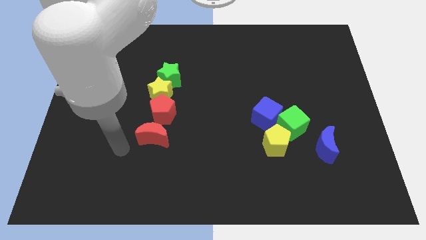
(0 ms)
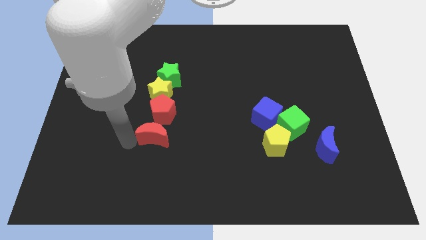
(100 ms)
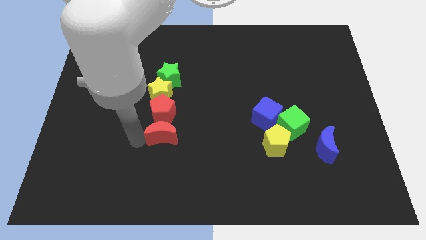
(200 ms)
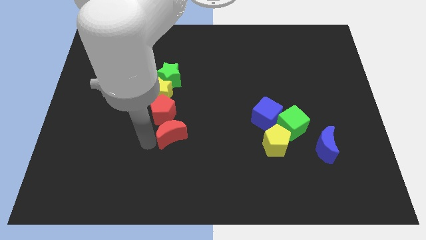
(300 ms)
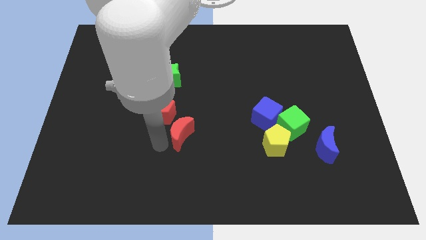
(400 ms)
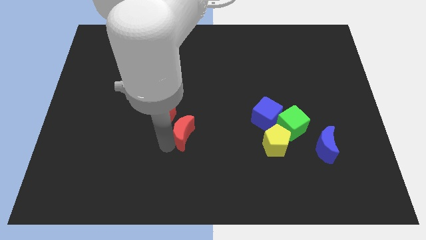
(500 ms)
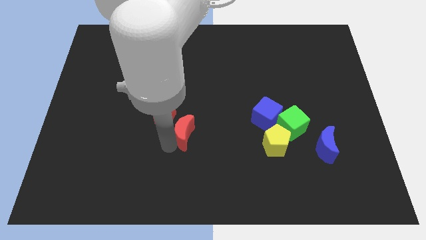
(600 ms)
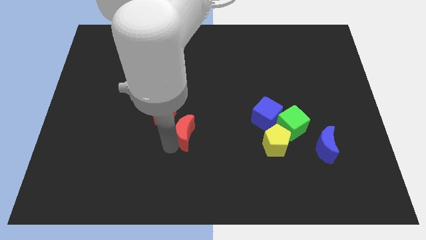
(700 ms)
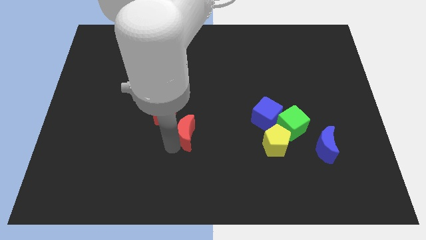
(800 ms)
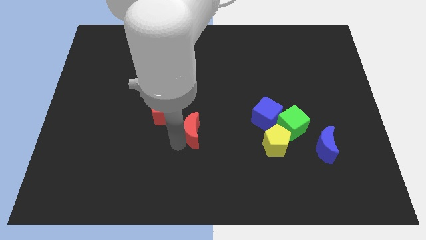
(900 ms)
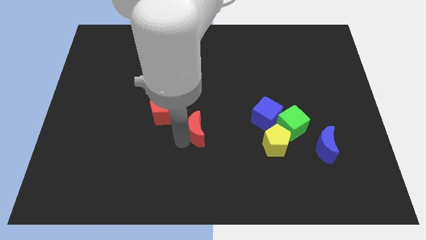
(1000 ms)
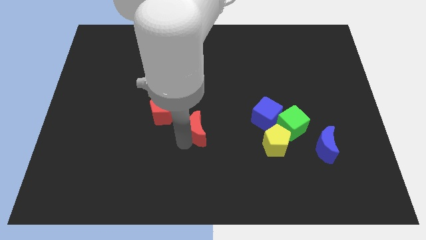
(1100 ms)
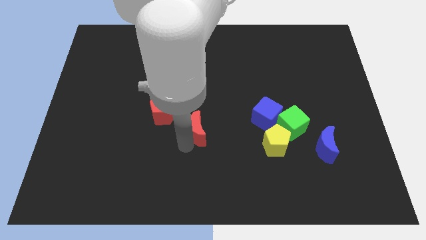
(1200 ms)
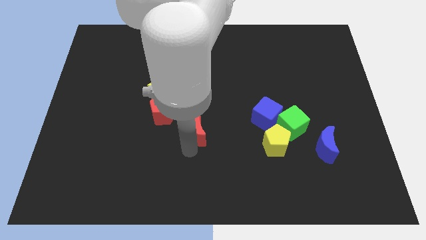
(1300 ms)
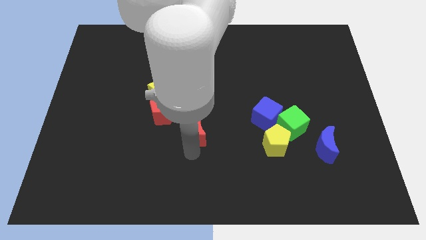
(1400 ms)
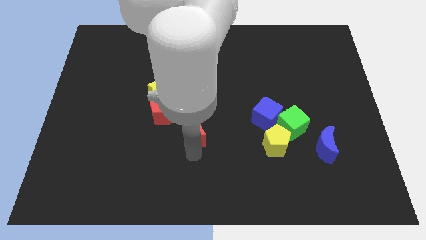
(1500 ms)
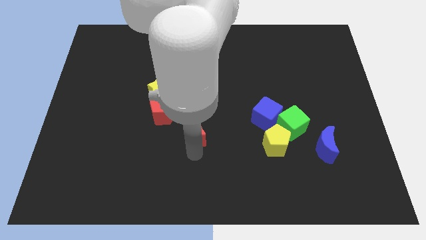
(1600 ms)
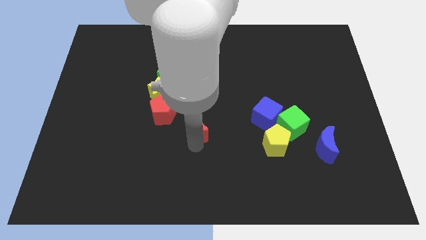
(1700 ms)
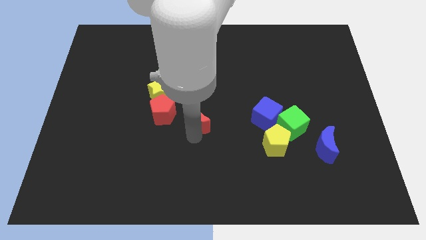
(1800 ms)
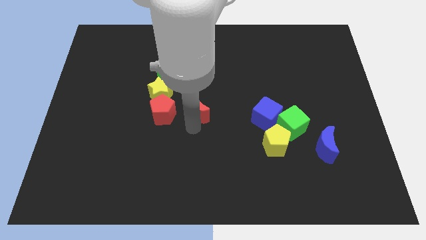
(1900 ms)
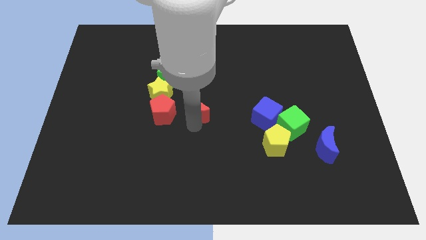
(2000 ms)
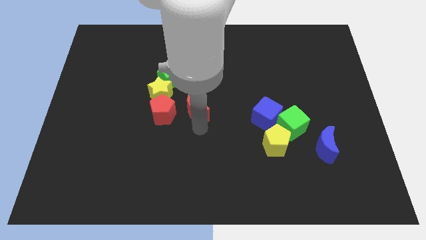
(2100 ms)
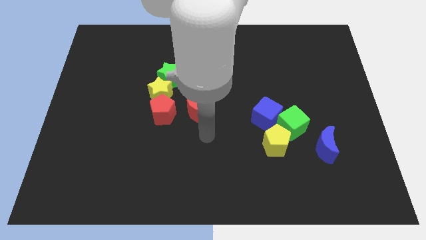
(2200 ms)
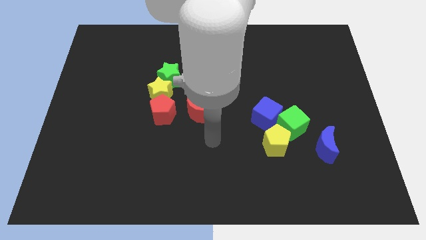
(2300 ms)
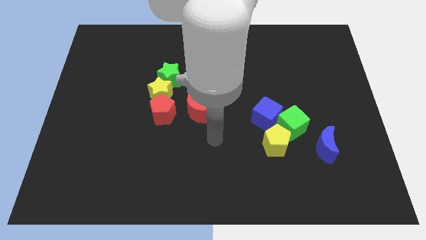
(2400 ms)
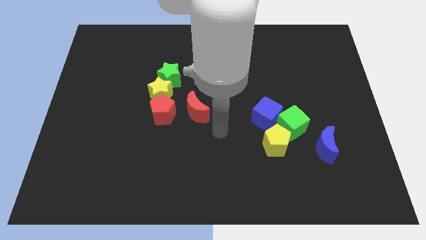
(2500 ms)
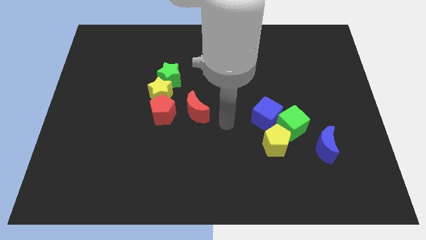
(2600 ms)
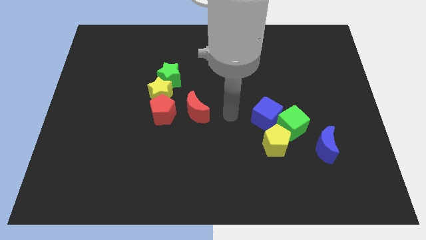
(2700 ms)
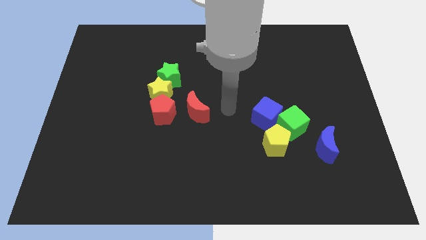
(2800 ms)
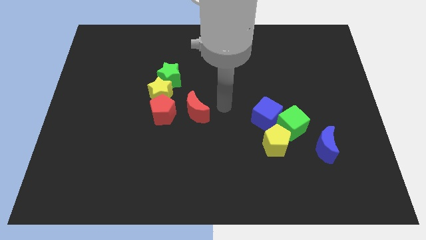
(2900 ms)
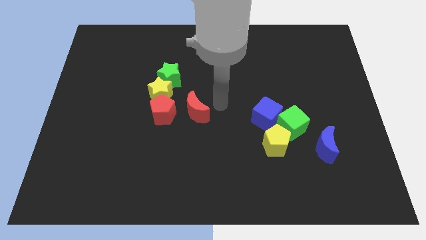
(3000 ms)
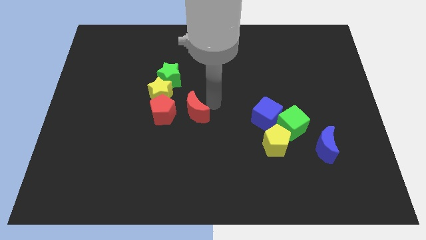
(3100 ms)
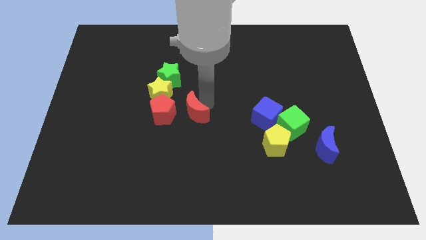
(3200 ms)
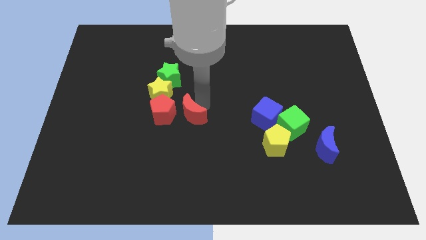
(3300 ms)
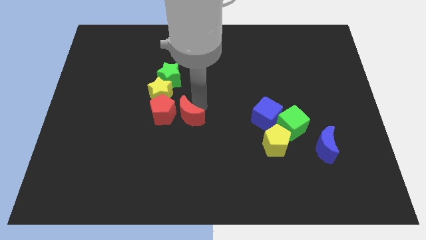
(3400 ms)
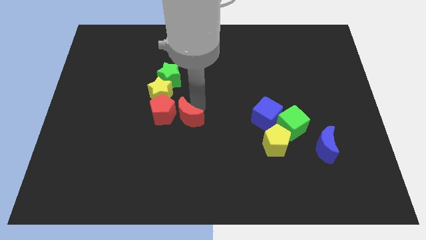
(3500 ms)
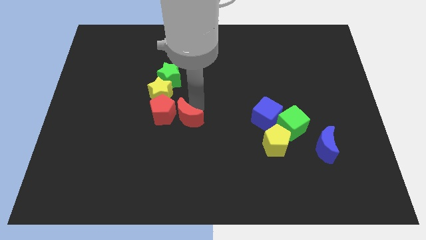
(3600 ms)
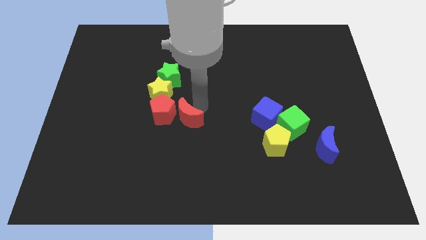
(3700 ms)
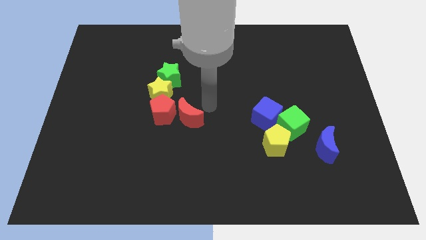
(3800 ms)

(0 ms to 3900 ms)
push the red crescent close to red pentagon

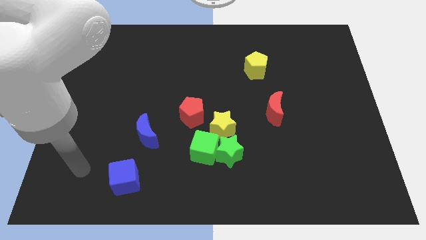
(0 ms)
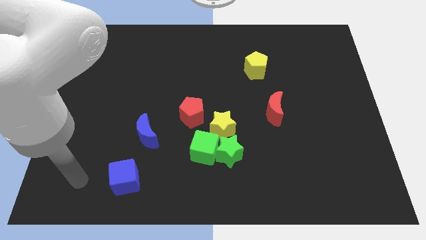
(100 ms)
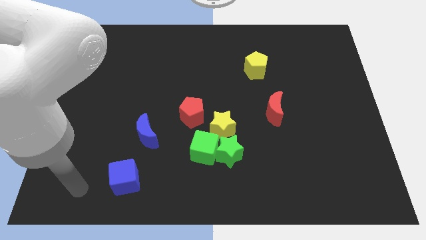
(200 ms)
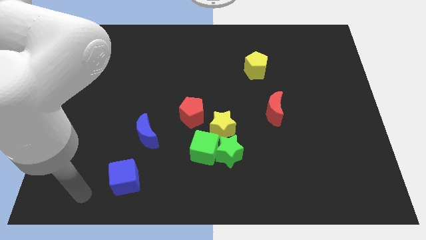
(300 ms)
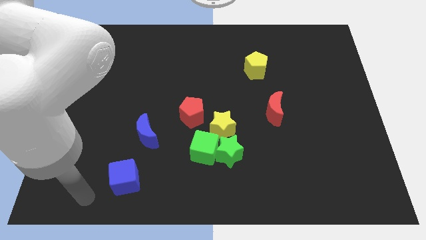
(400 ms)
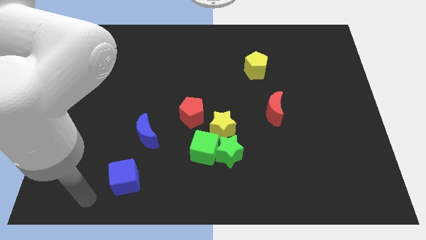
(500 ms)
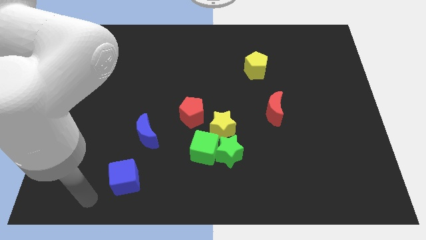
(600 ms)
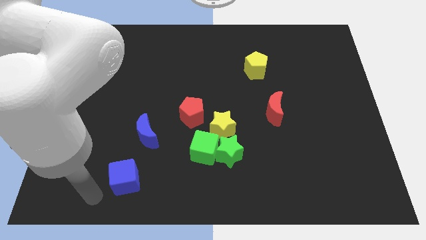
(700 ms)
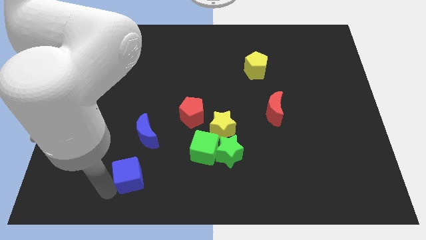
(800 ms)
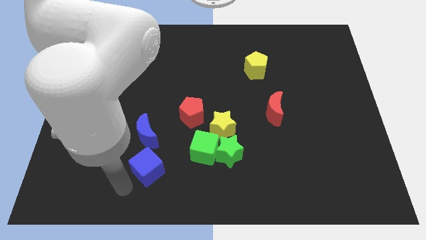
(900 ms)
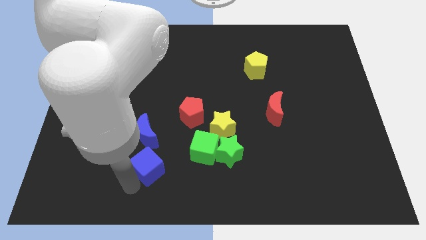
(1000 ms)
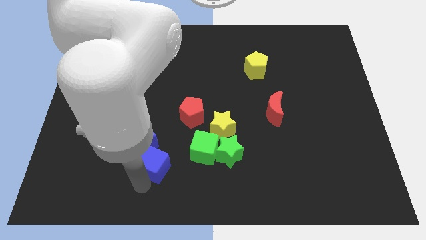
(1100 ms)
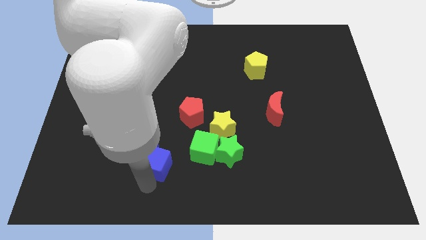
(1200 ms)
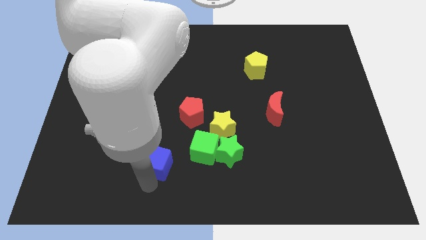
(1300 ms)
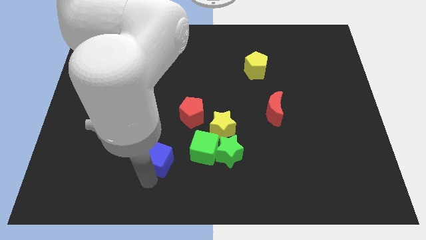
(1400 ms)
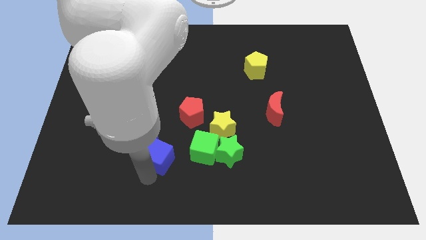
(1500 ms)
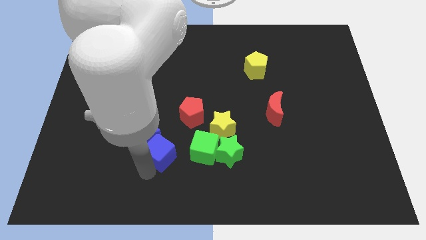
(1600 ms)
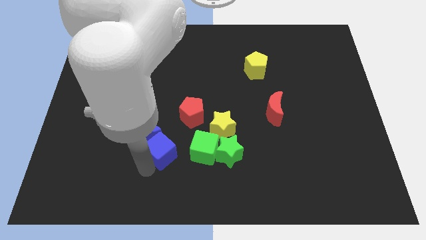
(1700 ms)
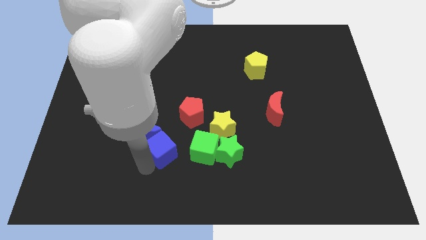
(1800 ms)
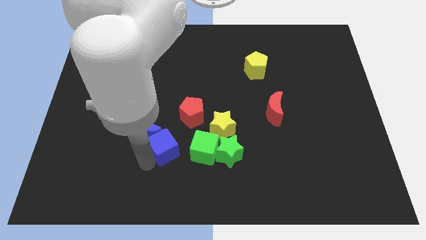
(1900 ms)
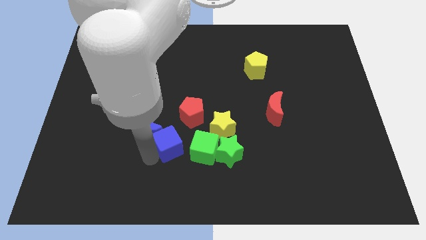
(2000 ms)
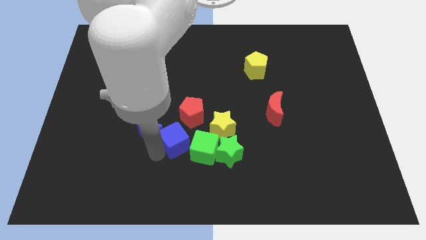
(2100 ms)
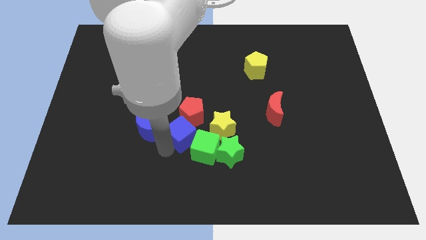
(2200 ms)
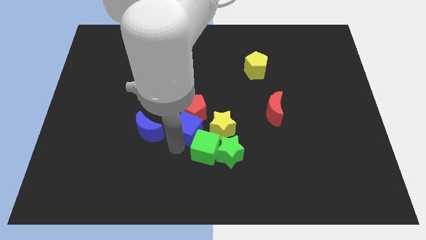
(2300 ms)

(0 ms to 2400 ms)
place the blue cube towards the right of blue crescent

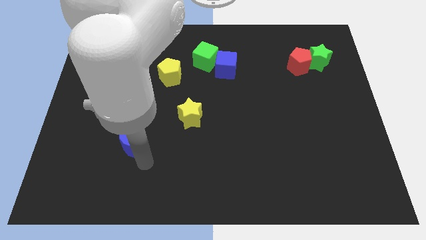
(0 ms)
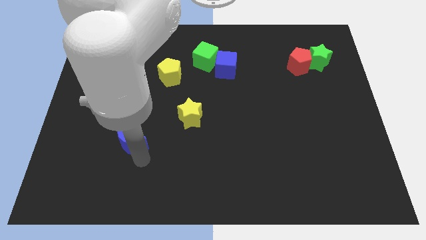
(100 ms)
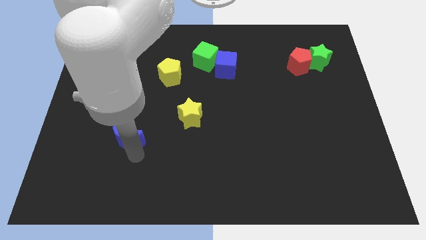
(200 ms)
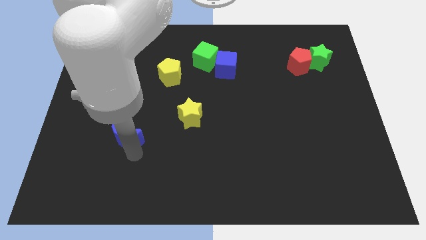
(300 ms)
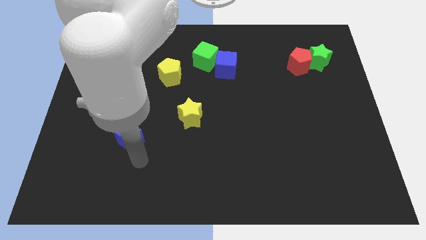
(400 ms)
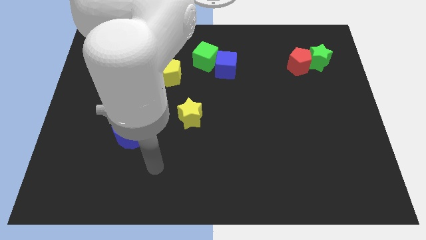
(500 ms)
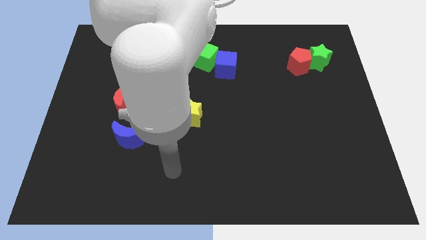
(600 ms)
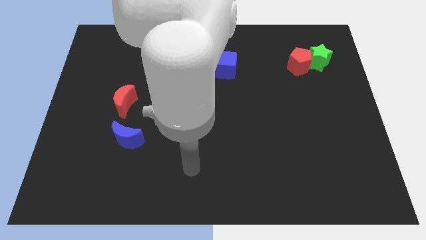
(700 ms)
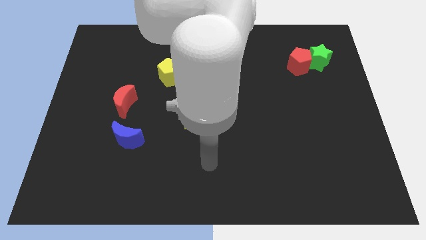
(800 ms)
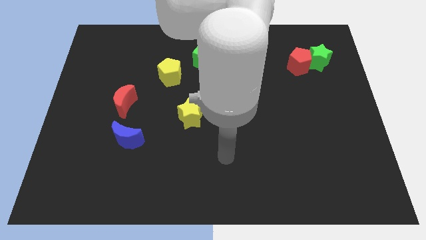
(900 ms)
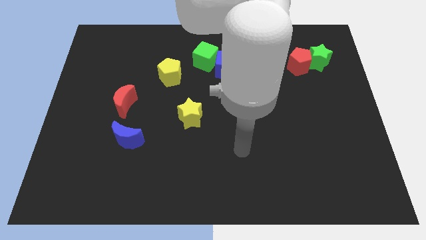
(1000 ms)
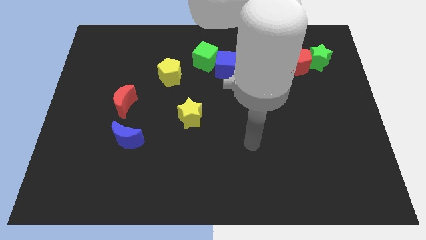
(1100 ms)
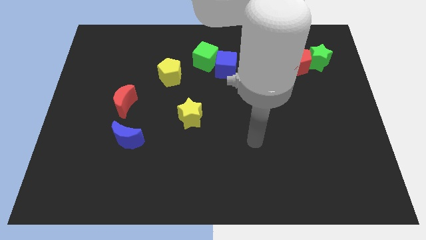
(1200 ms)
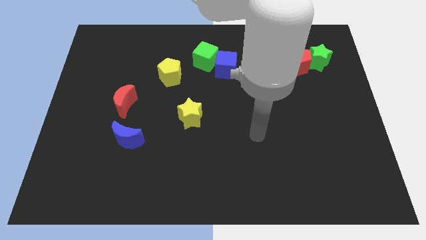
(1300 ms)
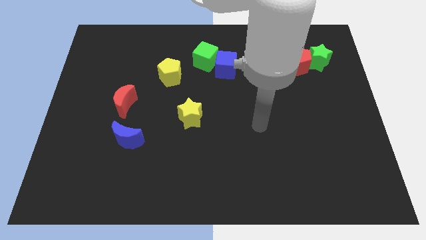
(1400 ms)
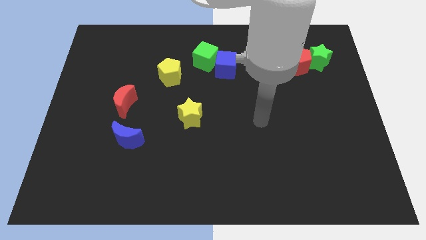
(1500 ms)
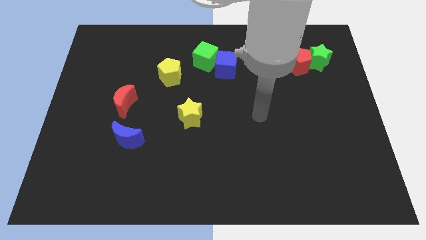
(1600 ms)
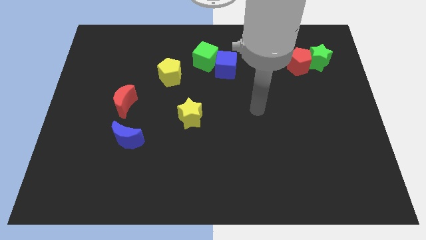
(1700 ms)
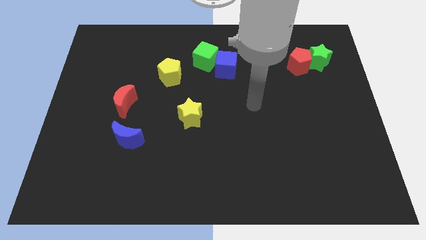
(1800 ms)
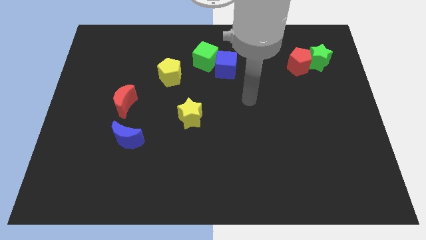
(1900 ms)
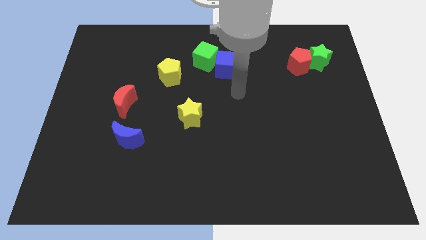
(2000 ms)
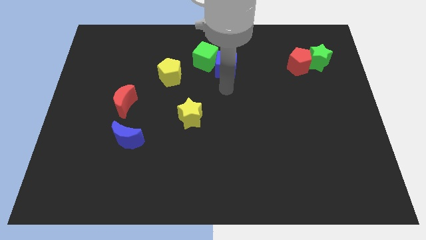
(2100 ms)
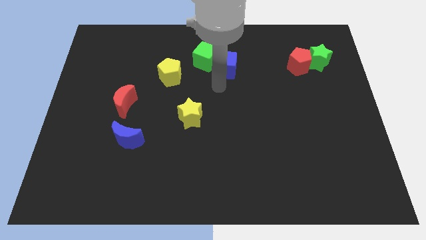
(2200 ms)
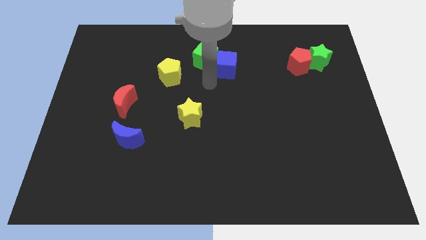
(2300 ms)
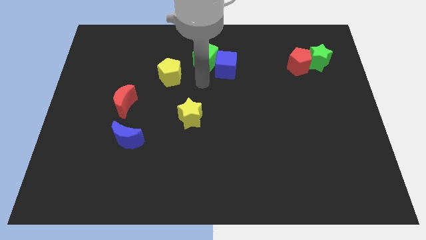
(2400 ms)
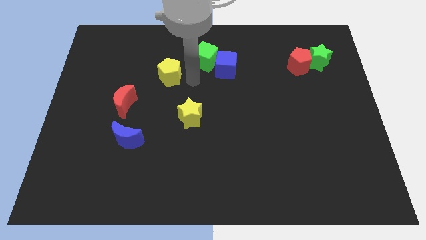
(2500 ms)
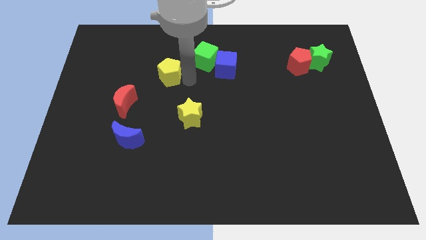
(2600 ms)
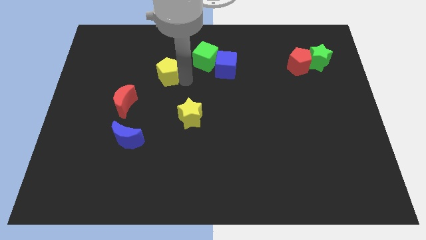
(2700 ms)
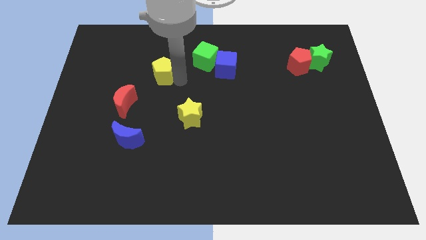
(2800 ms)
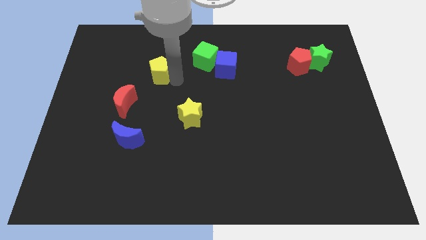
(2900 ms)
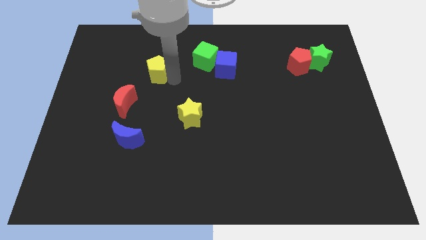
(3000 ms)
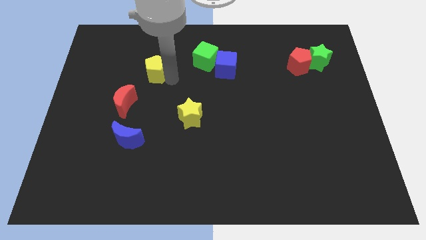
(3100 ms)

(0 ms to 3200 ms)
push the yellow pentagon and the blue moon to the left side
